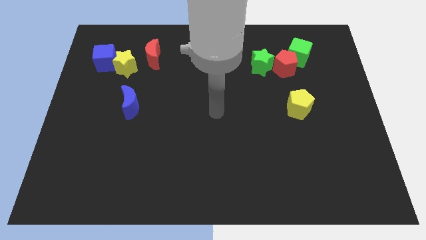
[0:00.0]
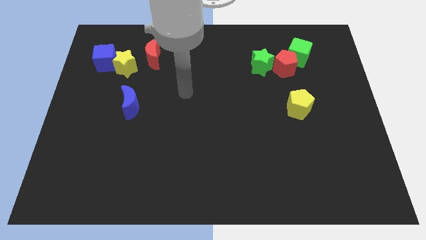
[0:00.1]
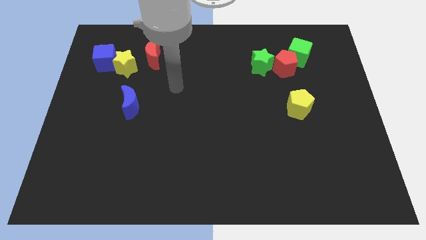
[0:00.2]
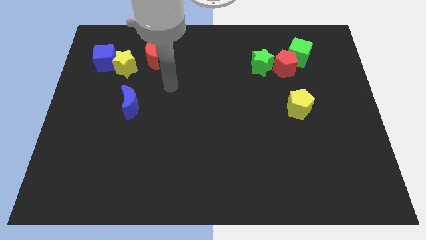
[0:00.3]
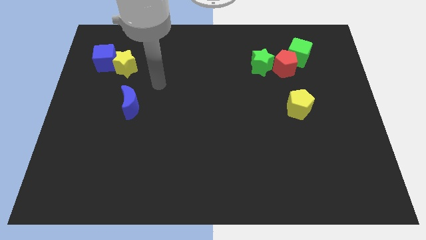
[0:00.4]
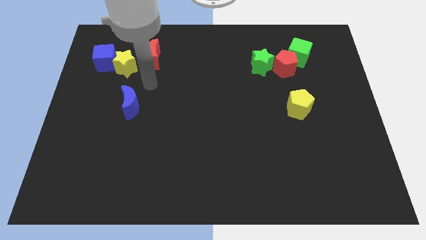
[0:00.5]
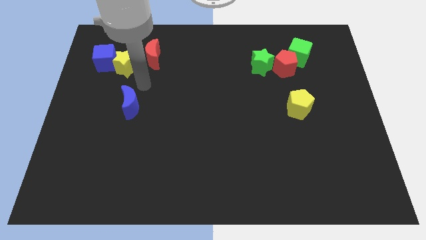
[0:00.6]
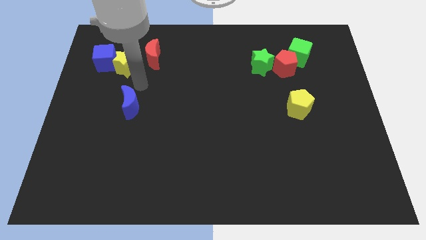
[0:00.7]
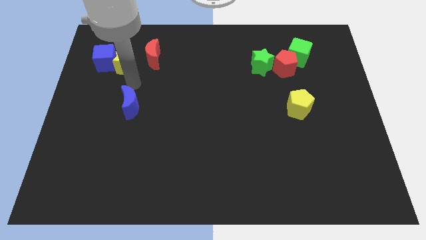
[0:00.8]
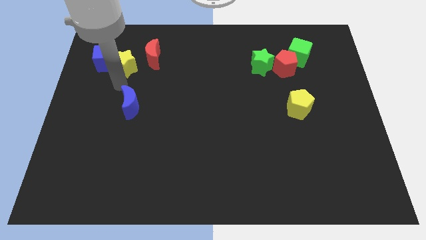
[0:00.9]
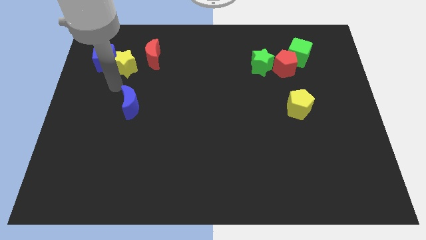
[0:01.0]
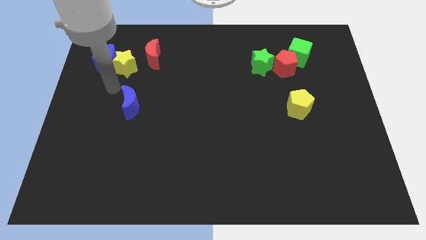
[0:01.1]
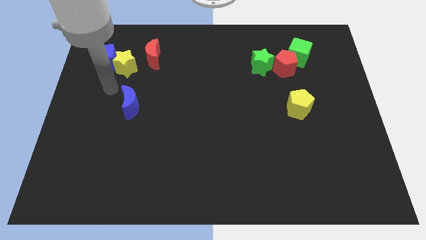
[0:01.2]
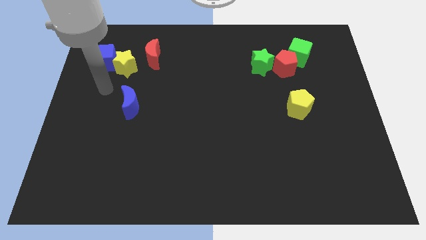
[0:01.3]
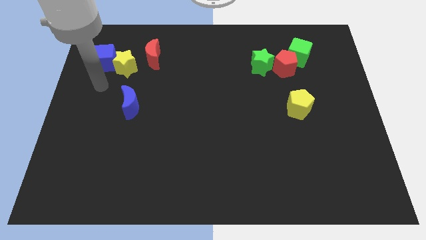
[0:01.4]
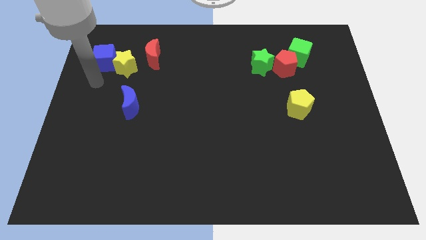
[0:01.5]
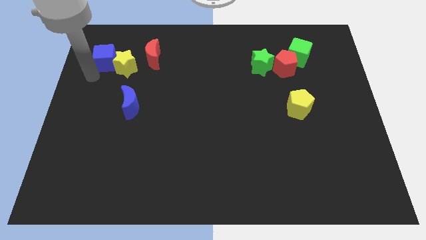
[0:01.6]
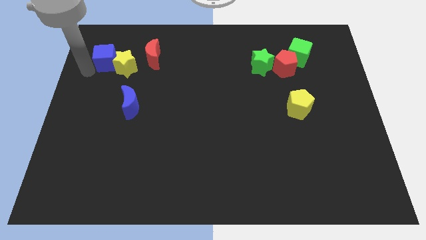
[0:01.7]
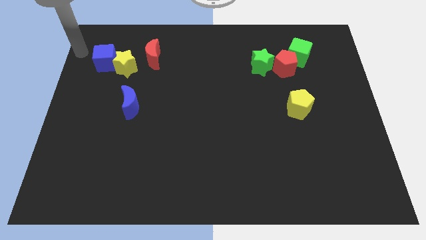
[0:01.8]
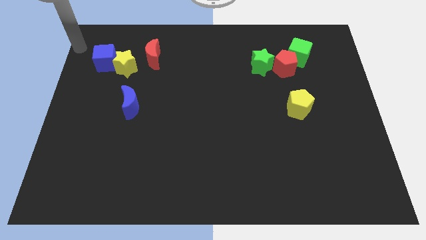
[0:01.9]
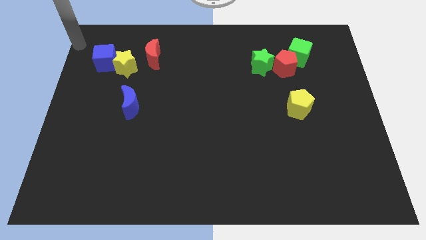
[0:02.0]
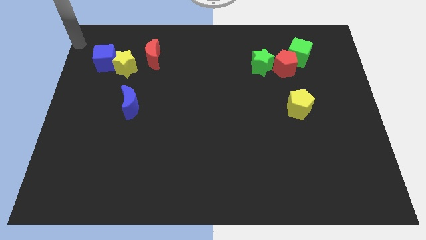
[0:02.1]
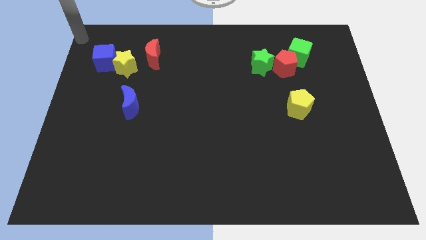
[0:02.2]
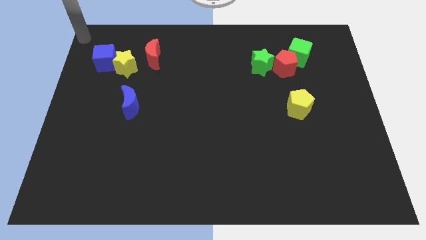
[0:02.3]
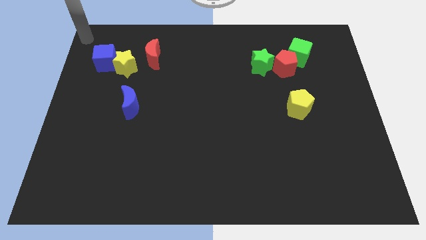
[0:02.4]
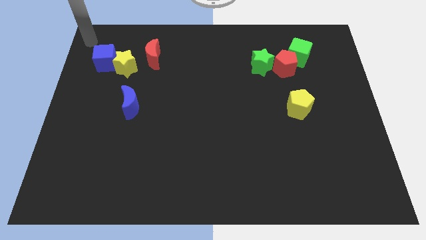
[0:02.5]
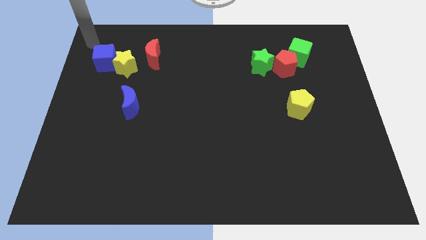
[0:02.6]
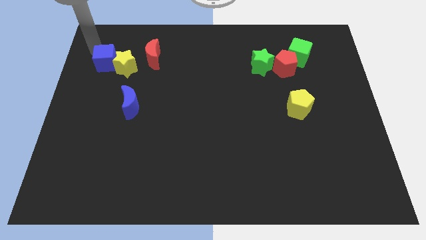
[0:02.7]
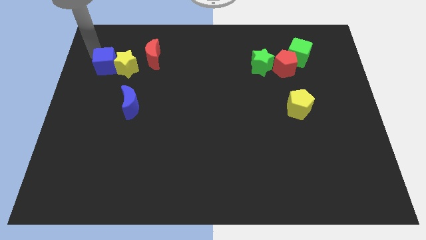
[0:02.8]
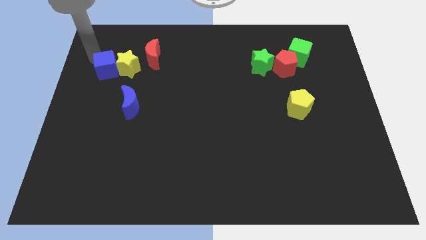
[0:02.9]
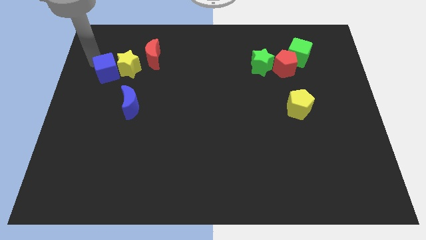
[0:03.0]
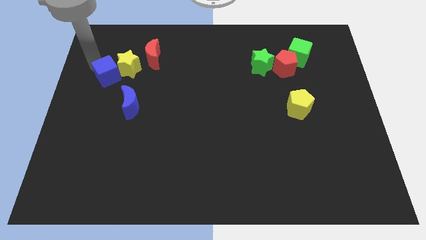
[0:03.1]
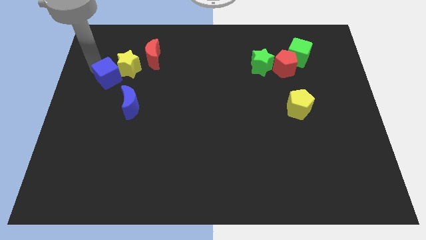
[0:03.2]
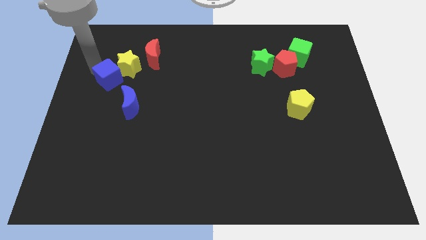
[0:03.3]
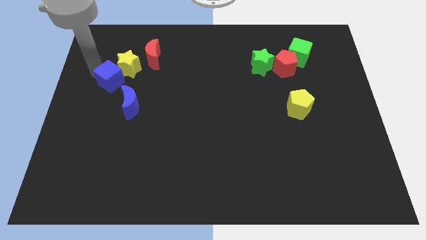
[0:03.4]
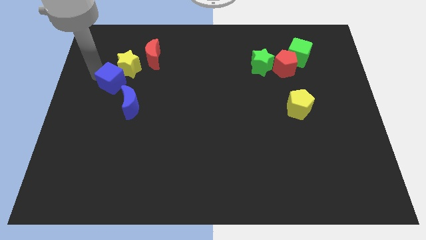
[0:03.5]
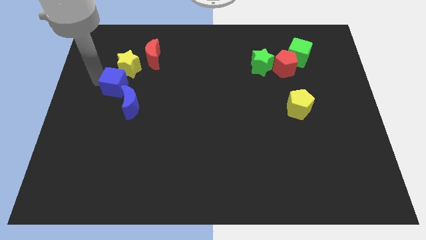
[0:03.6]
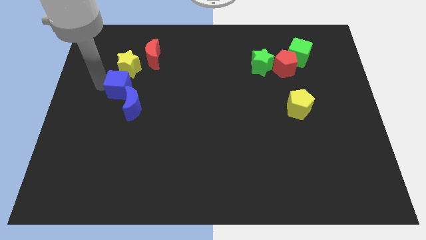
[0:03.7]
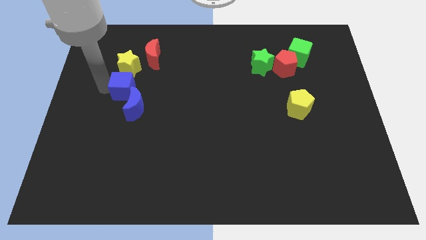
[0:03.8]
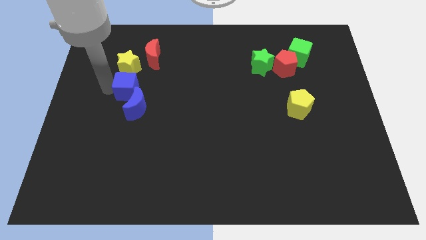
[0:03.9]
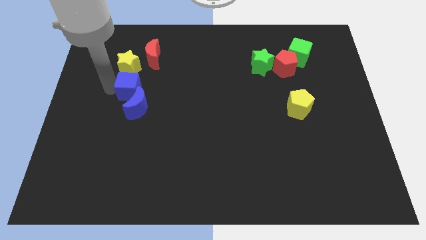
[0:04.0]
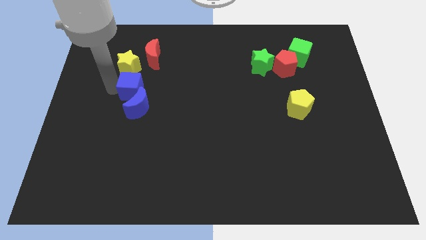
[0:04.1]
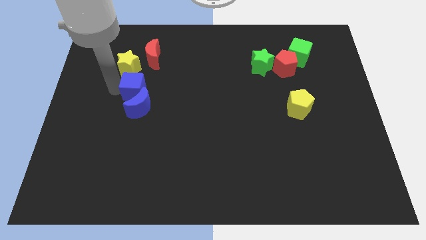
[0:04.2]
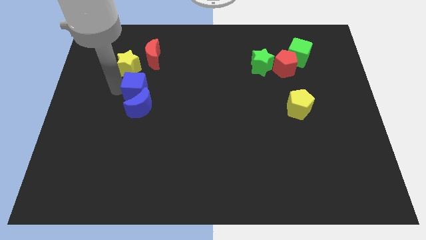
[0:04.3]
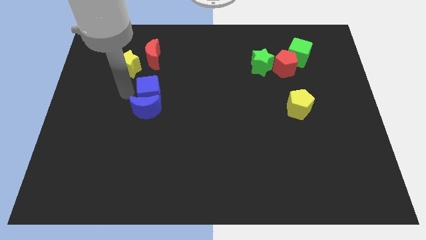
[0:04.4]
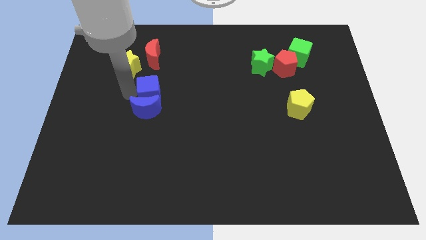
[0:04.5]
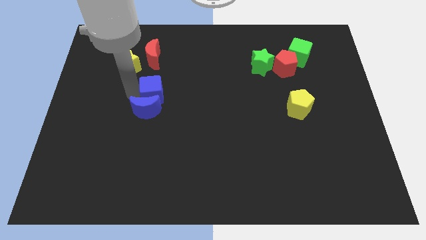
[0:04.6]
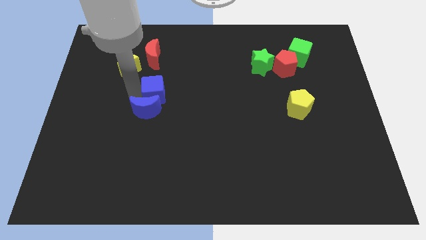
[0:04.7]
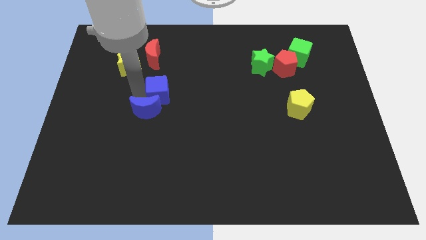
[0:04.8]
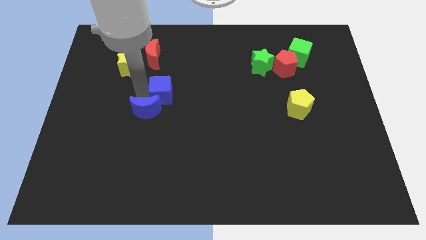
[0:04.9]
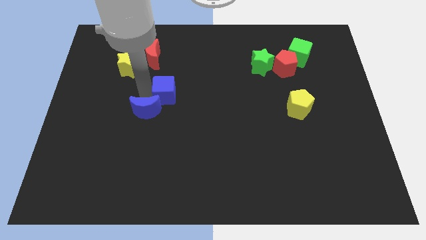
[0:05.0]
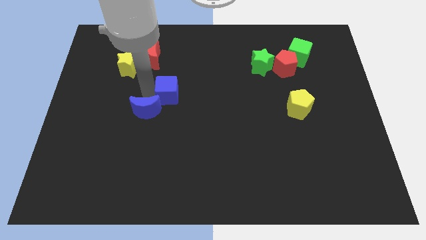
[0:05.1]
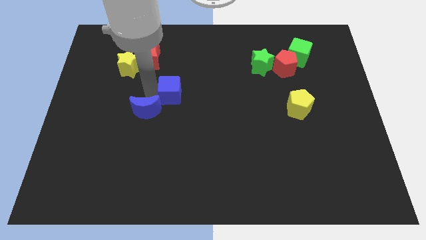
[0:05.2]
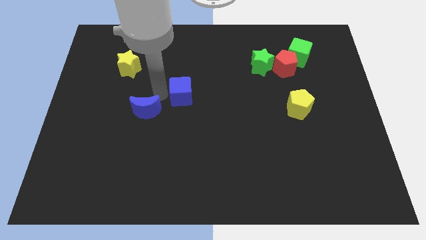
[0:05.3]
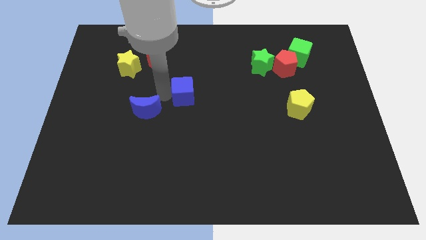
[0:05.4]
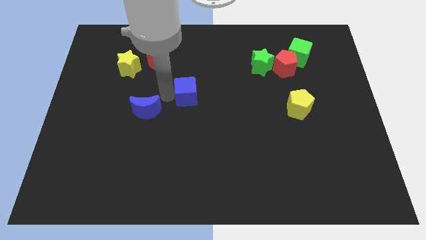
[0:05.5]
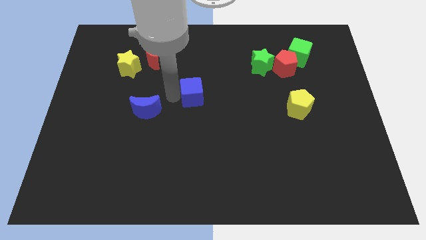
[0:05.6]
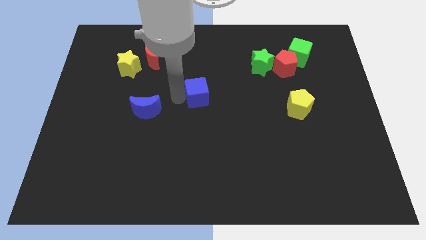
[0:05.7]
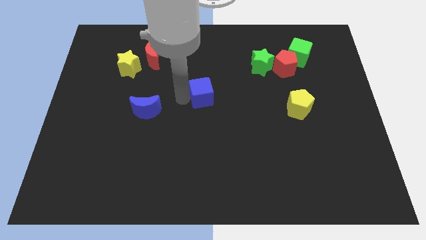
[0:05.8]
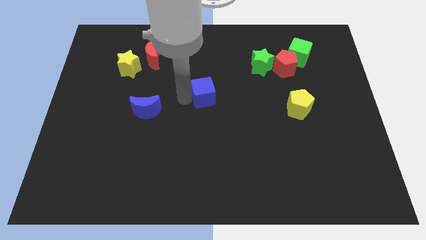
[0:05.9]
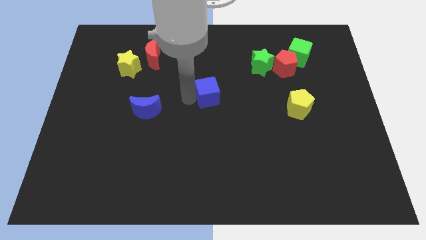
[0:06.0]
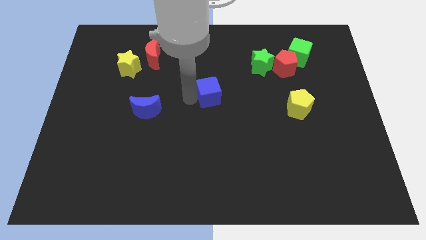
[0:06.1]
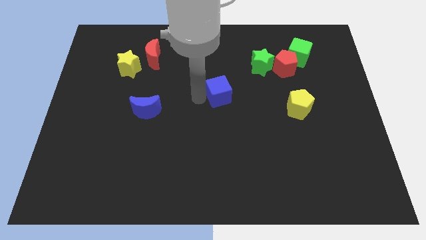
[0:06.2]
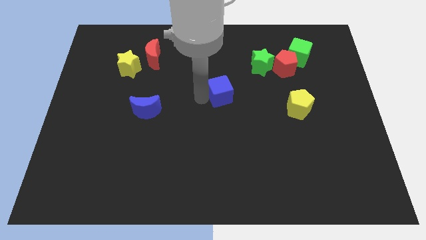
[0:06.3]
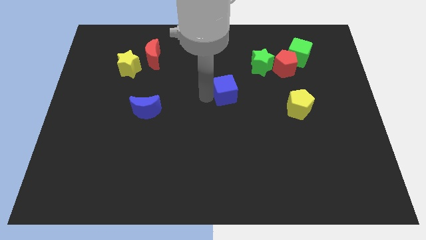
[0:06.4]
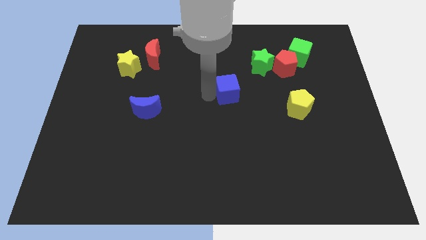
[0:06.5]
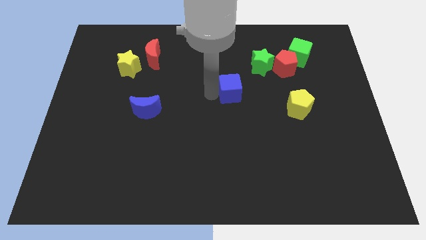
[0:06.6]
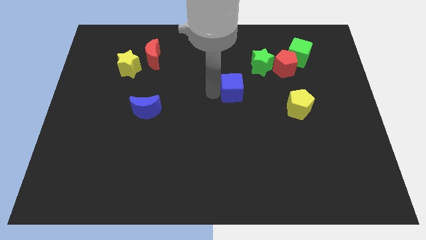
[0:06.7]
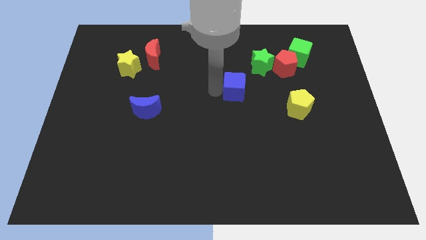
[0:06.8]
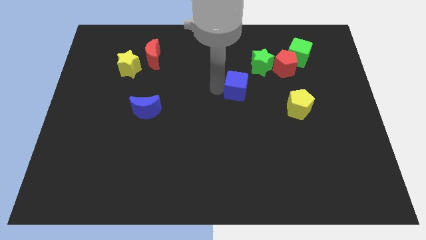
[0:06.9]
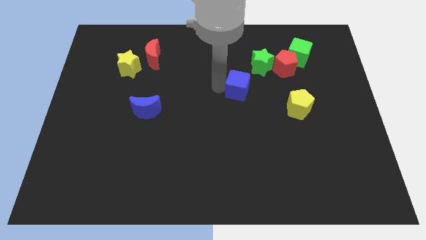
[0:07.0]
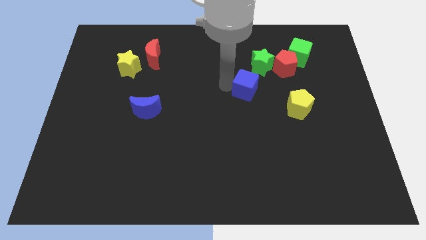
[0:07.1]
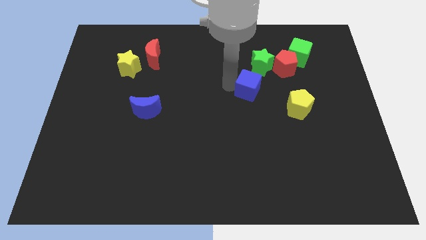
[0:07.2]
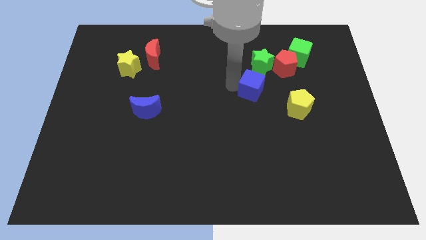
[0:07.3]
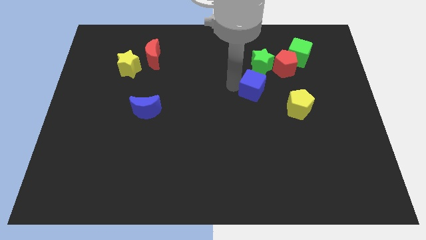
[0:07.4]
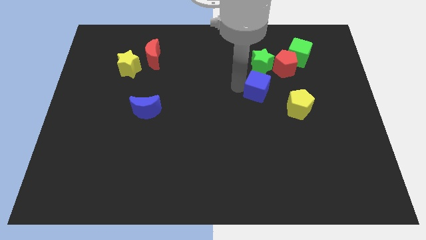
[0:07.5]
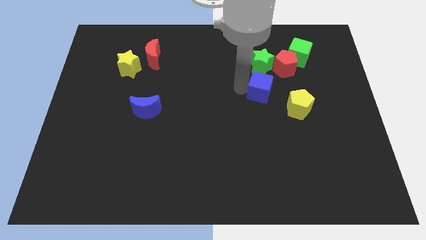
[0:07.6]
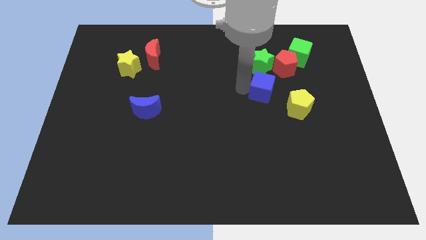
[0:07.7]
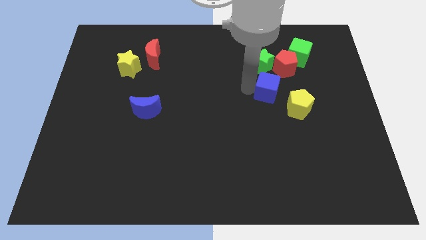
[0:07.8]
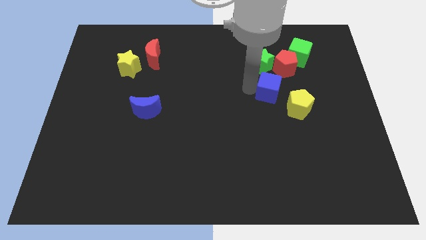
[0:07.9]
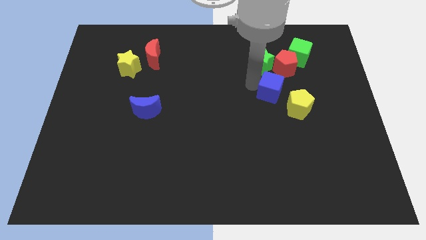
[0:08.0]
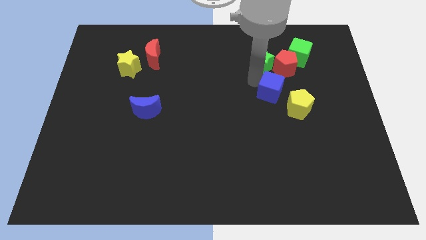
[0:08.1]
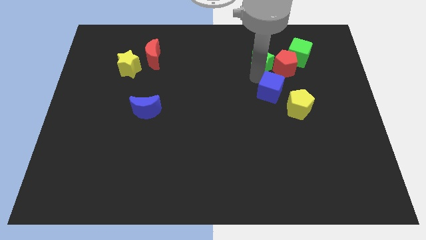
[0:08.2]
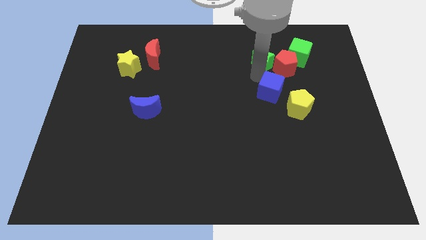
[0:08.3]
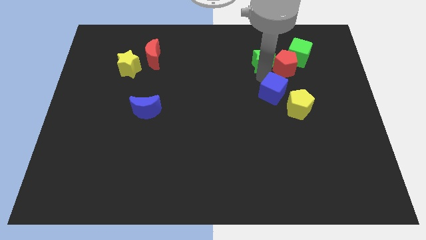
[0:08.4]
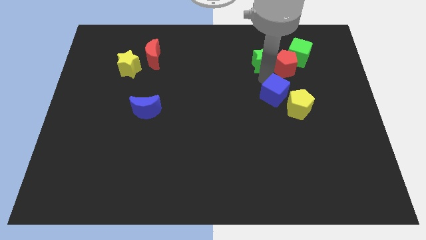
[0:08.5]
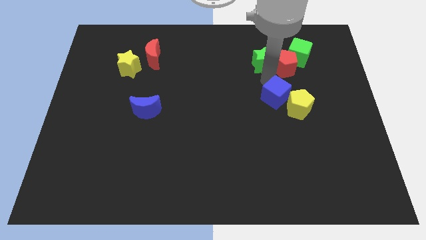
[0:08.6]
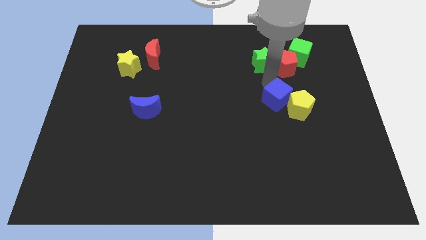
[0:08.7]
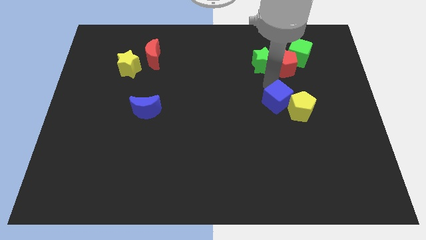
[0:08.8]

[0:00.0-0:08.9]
slide the blue cube to the yellow pentagon
